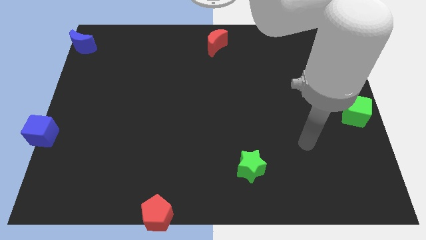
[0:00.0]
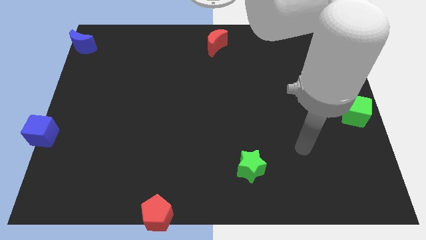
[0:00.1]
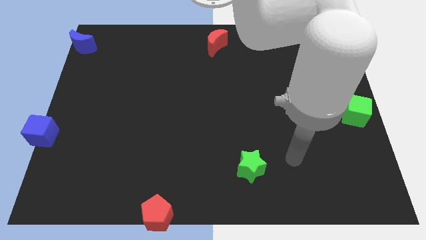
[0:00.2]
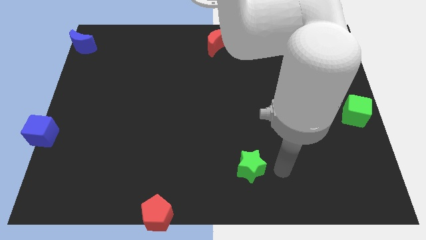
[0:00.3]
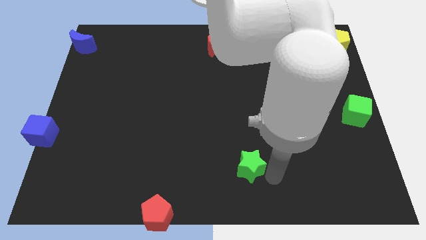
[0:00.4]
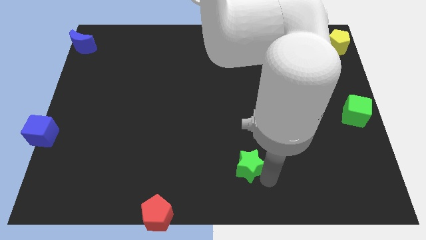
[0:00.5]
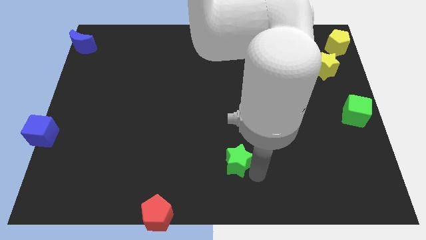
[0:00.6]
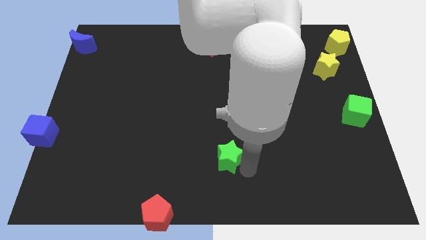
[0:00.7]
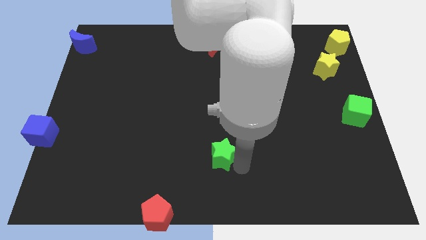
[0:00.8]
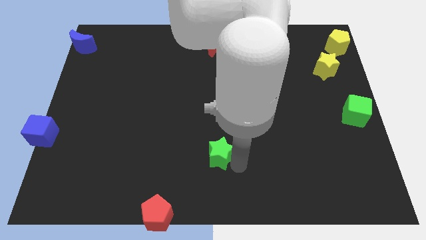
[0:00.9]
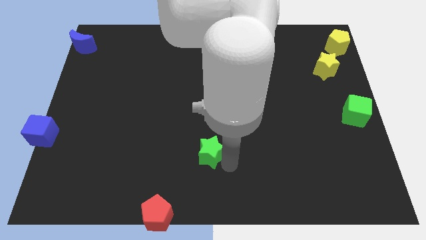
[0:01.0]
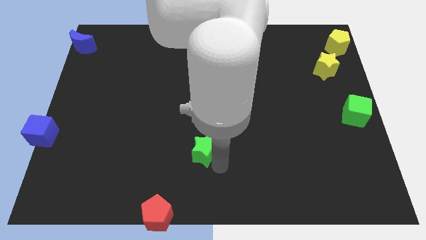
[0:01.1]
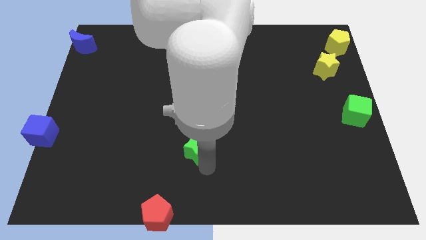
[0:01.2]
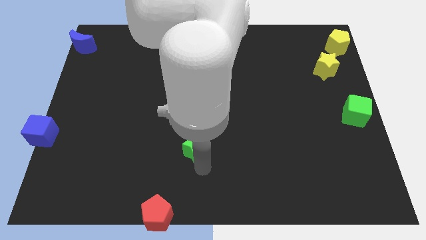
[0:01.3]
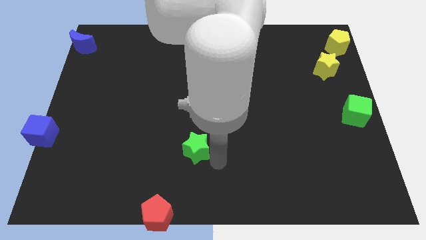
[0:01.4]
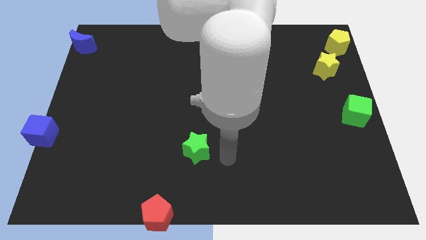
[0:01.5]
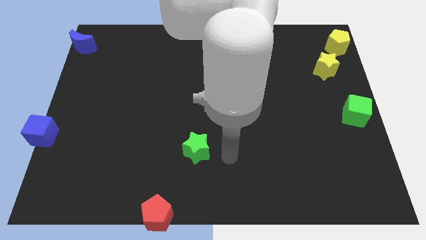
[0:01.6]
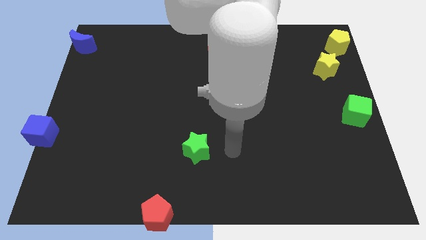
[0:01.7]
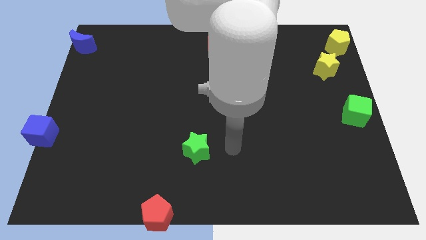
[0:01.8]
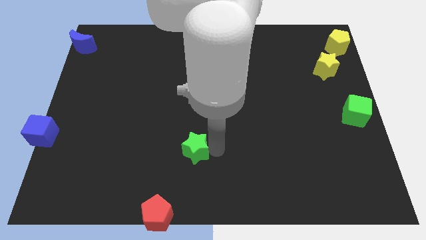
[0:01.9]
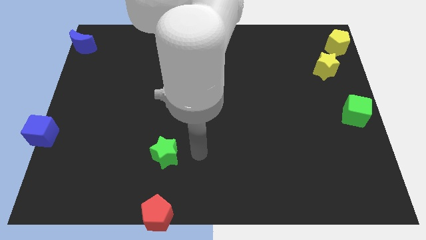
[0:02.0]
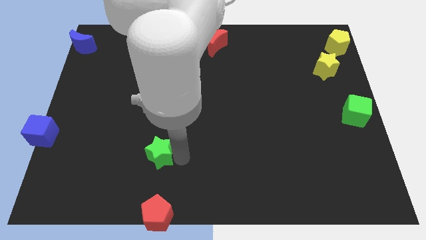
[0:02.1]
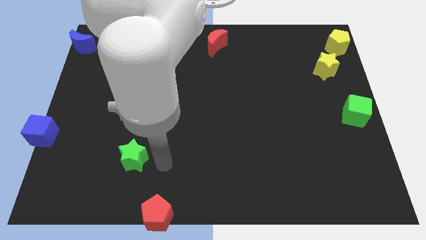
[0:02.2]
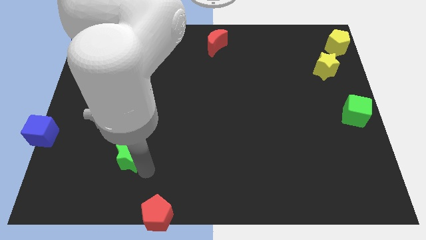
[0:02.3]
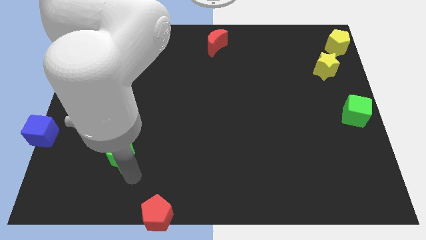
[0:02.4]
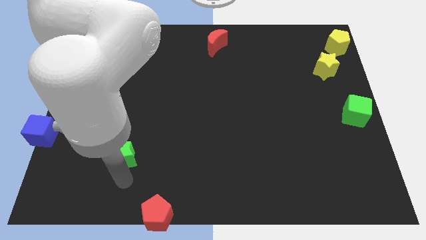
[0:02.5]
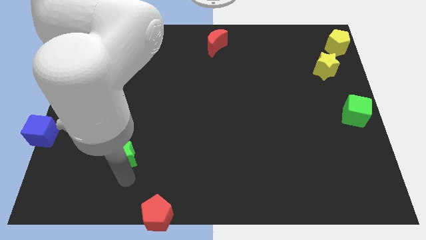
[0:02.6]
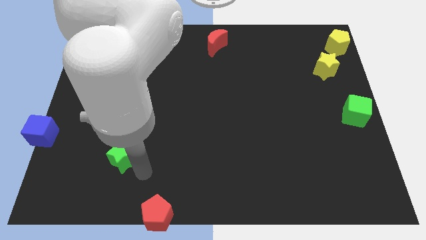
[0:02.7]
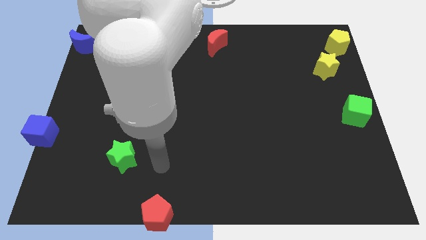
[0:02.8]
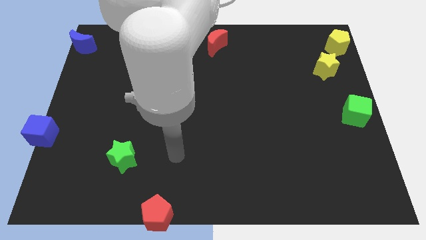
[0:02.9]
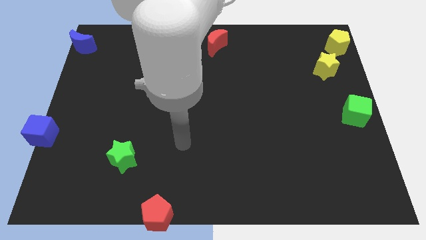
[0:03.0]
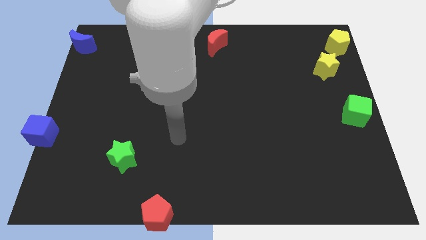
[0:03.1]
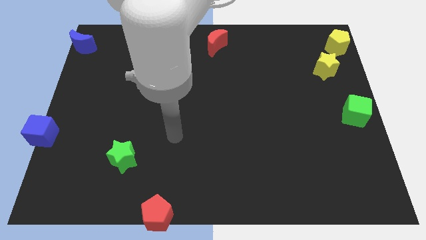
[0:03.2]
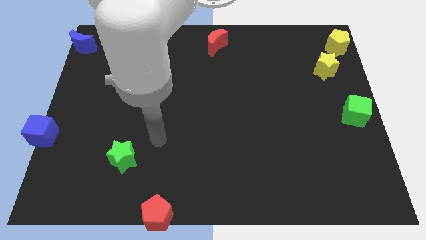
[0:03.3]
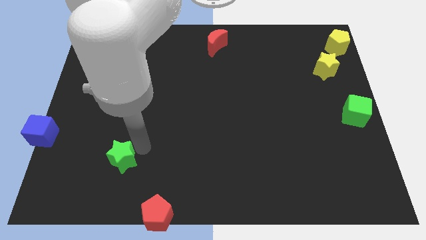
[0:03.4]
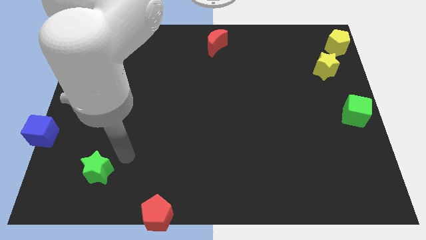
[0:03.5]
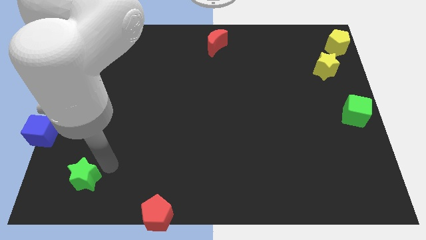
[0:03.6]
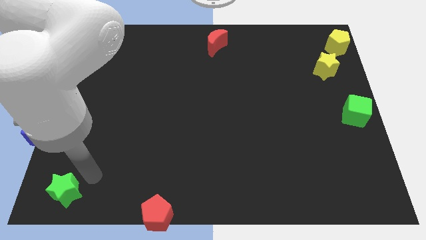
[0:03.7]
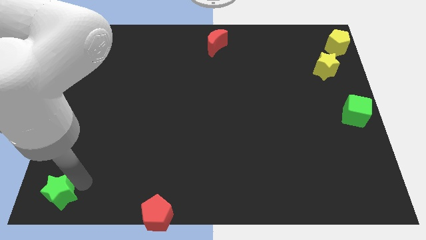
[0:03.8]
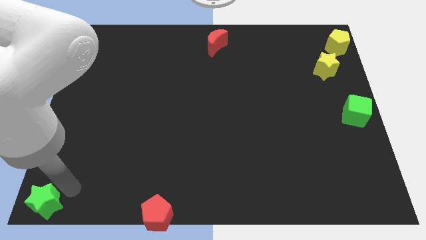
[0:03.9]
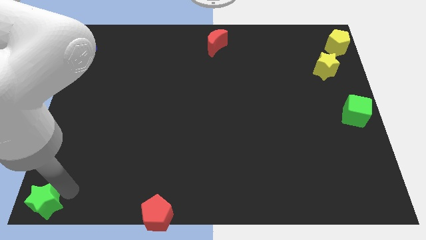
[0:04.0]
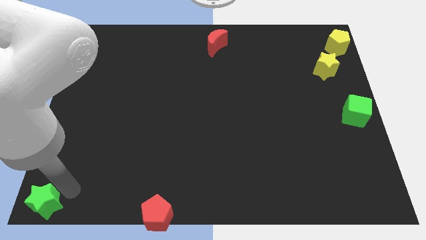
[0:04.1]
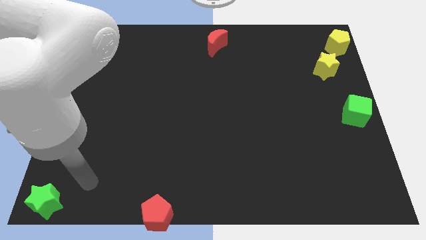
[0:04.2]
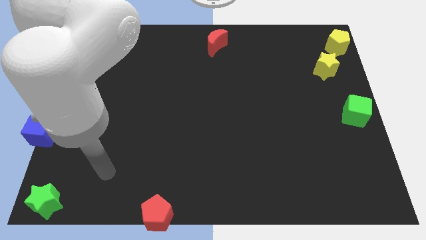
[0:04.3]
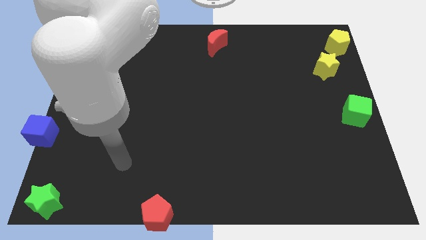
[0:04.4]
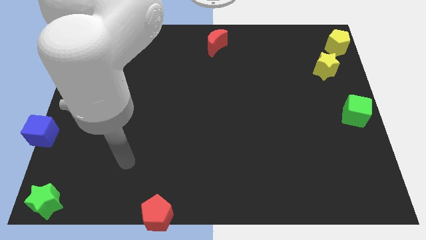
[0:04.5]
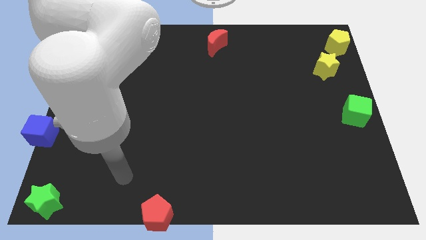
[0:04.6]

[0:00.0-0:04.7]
place the green star to the bottom left corner of the board

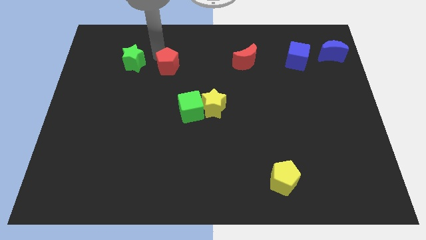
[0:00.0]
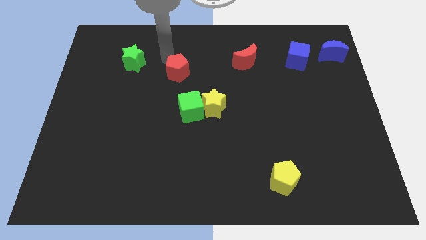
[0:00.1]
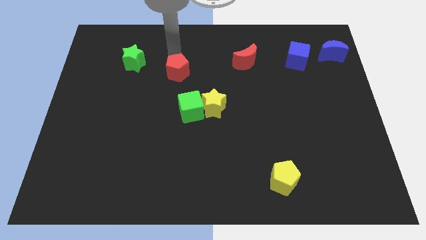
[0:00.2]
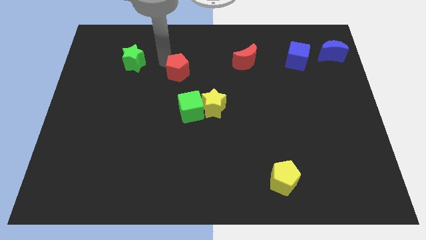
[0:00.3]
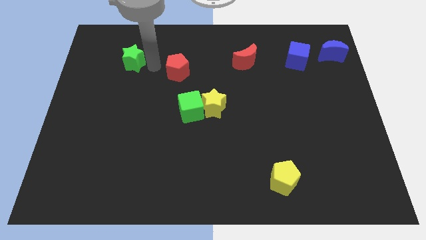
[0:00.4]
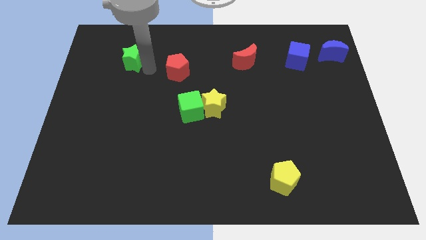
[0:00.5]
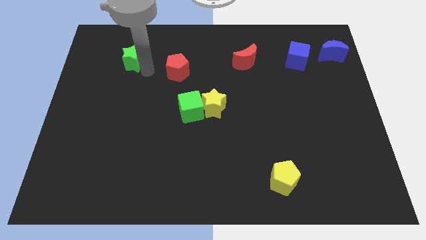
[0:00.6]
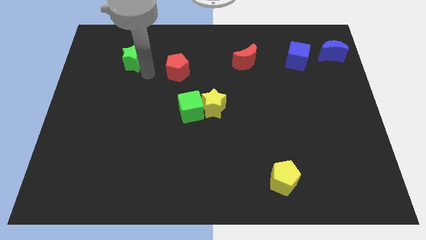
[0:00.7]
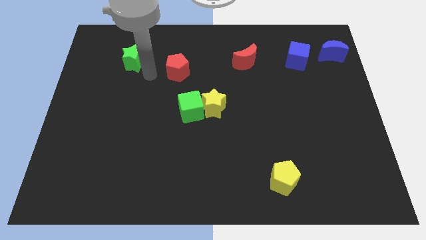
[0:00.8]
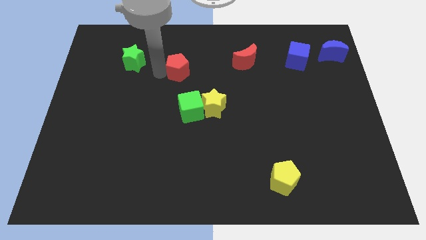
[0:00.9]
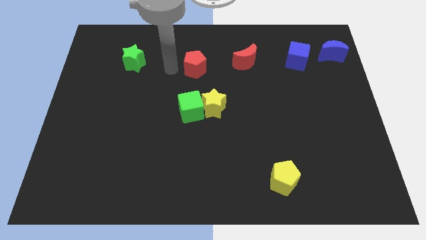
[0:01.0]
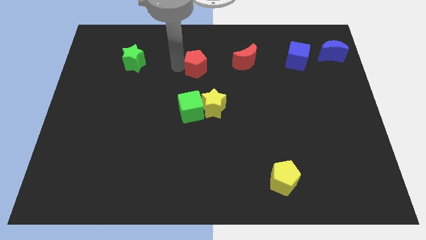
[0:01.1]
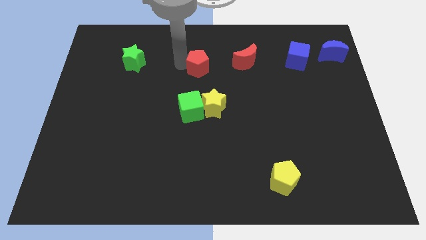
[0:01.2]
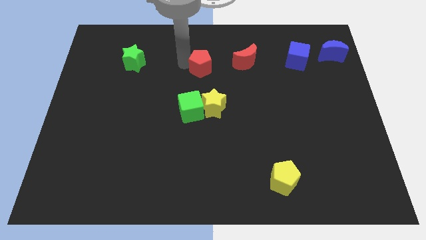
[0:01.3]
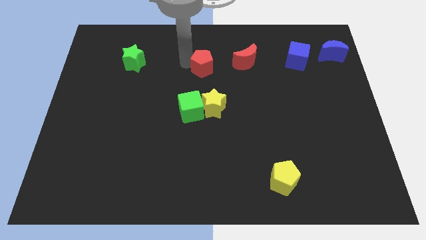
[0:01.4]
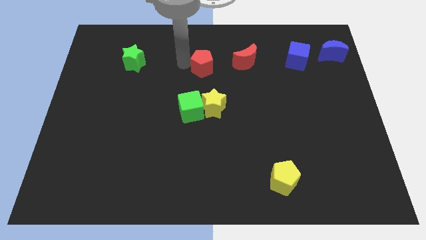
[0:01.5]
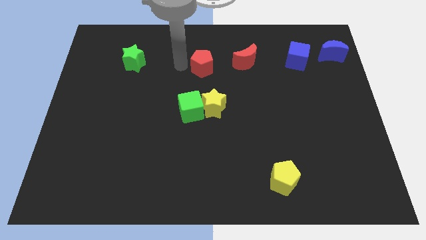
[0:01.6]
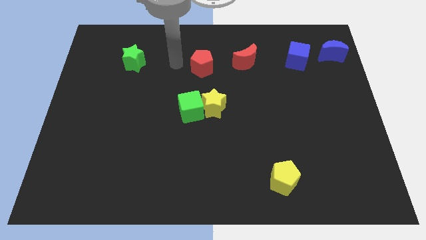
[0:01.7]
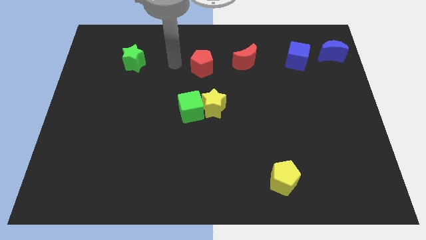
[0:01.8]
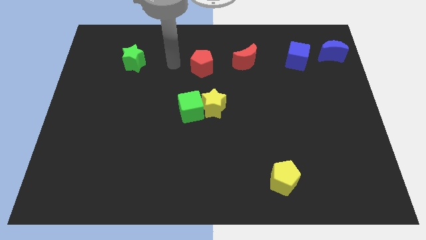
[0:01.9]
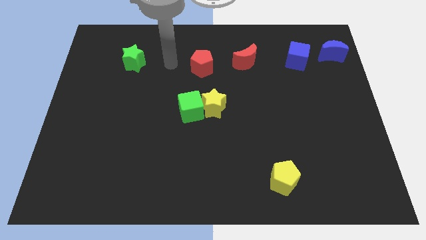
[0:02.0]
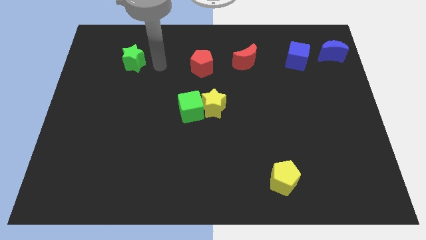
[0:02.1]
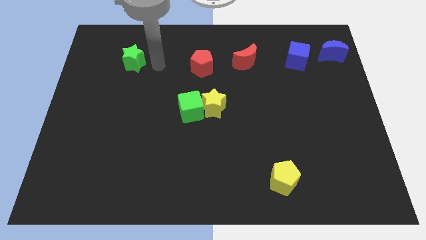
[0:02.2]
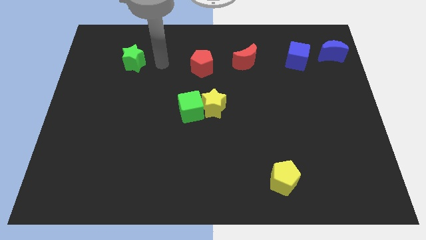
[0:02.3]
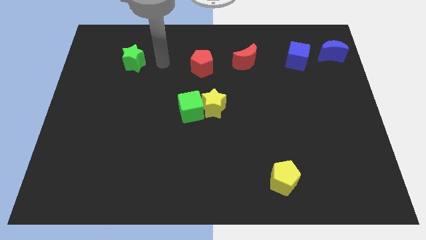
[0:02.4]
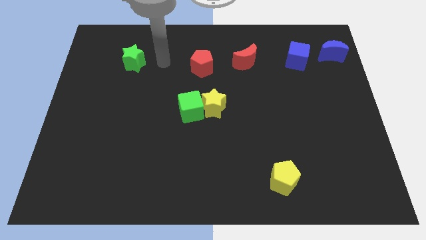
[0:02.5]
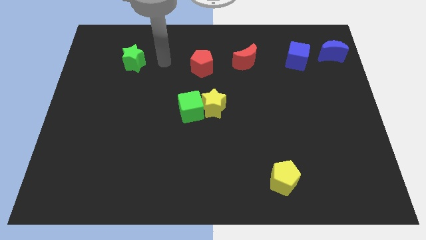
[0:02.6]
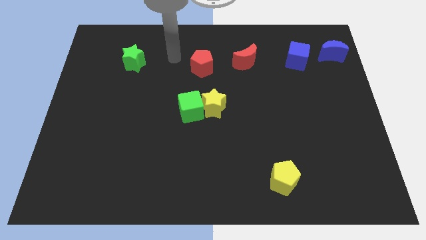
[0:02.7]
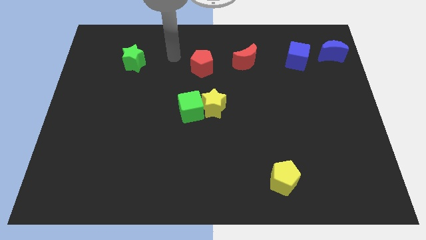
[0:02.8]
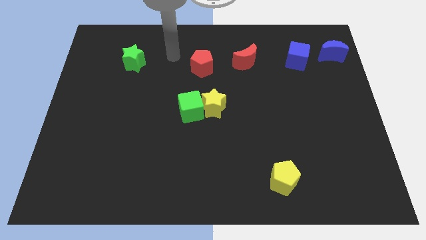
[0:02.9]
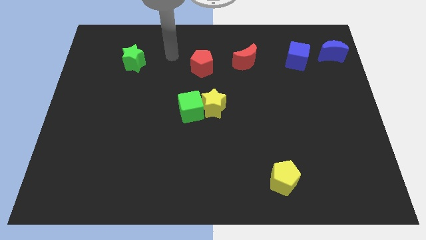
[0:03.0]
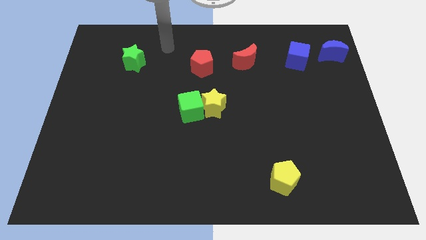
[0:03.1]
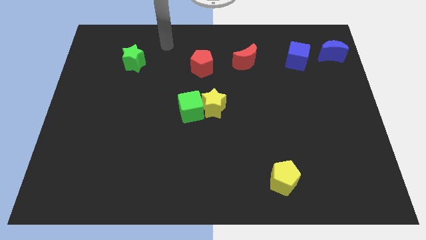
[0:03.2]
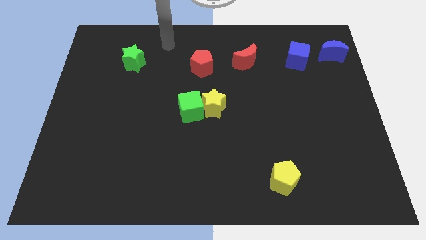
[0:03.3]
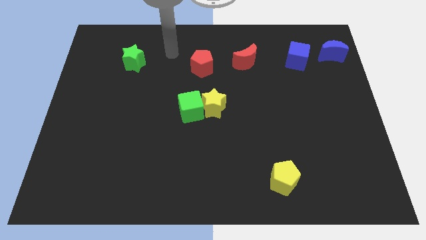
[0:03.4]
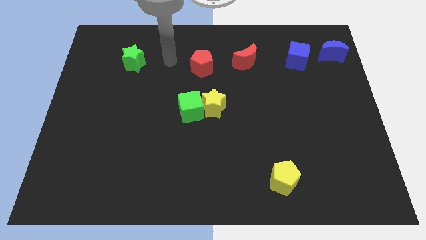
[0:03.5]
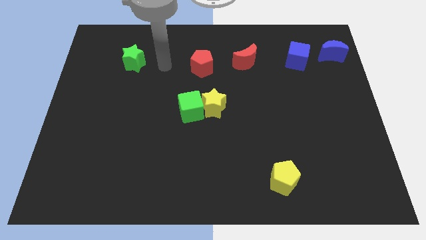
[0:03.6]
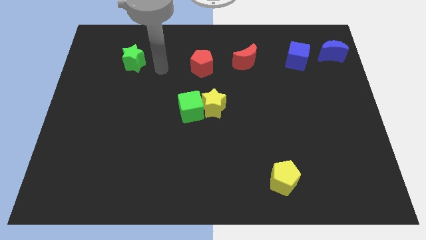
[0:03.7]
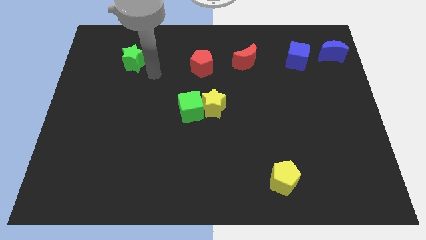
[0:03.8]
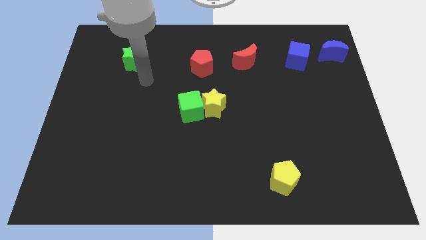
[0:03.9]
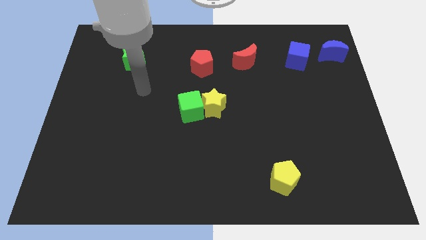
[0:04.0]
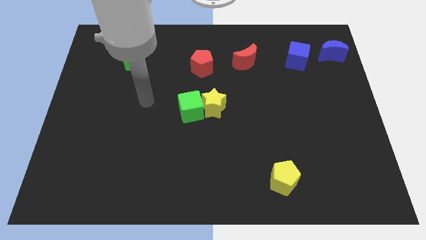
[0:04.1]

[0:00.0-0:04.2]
place the red pentagon to the left side of the red moon
